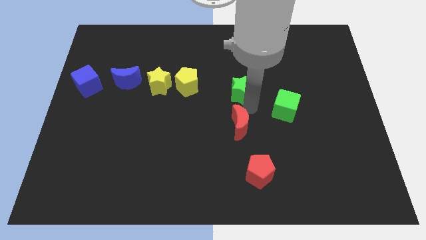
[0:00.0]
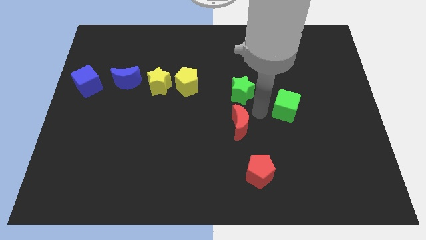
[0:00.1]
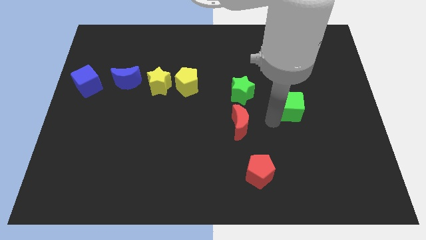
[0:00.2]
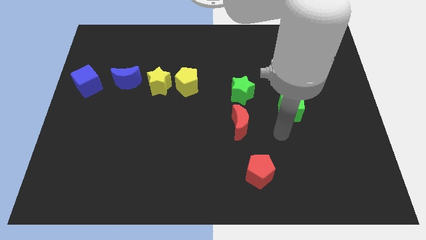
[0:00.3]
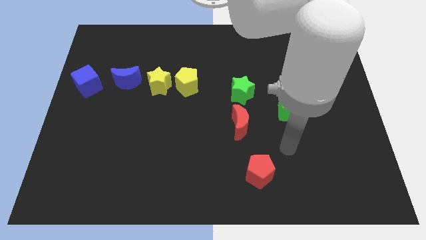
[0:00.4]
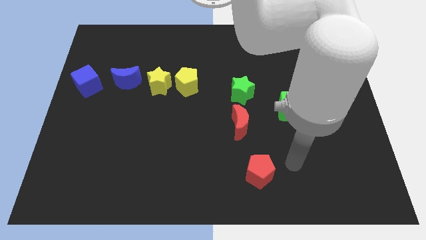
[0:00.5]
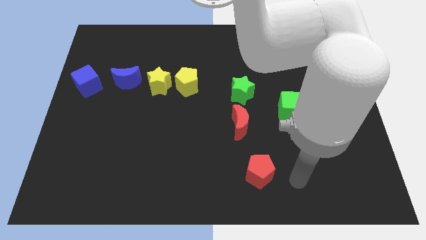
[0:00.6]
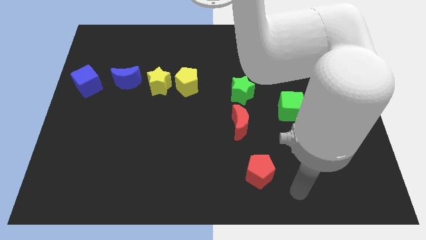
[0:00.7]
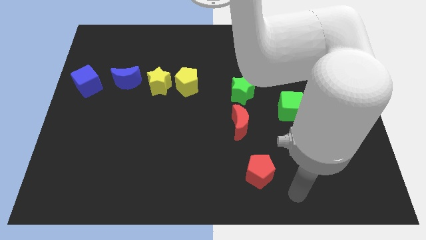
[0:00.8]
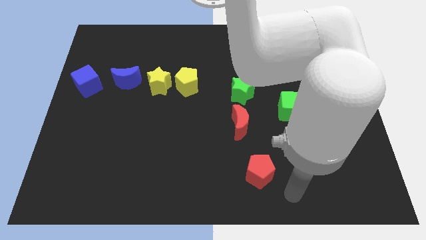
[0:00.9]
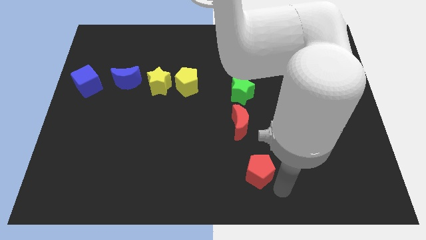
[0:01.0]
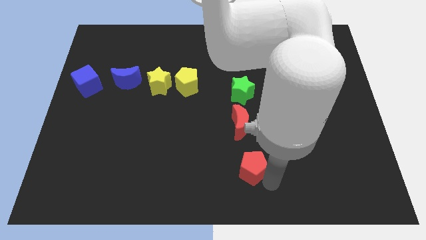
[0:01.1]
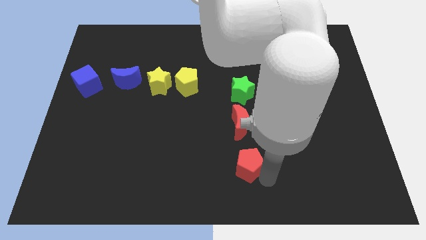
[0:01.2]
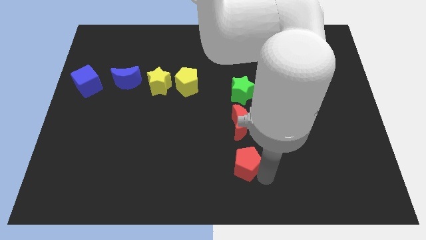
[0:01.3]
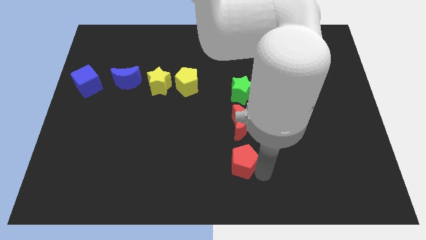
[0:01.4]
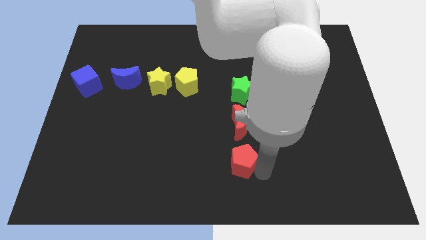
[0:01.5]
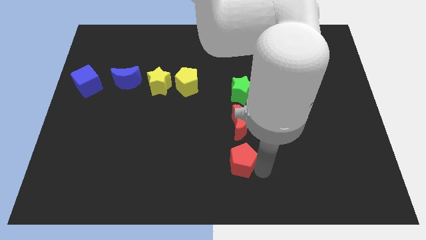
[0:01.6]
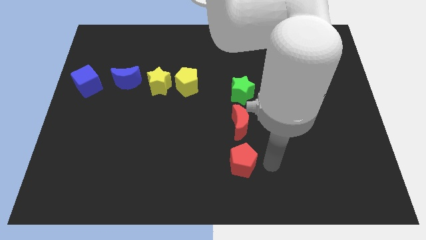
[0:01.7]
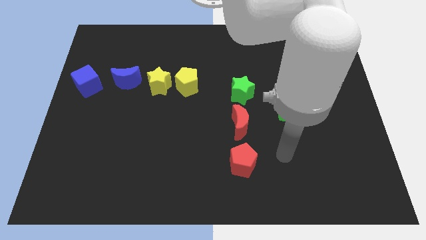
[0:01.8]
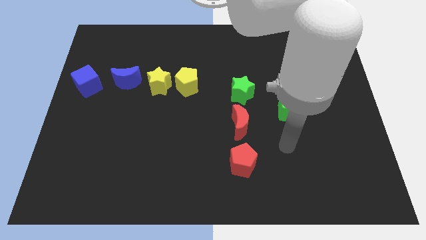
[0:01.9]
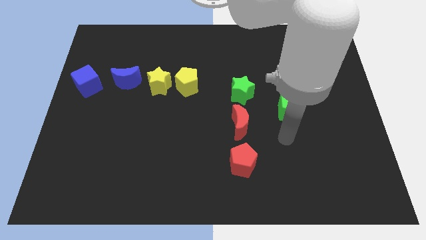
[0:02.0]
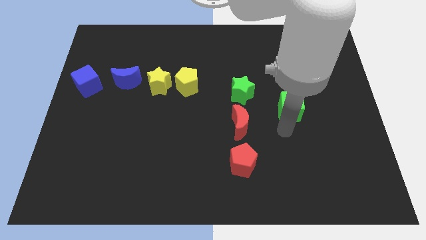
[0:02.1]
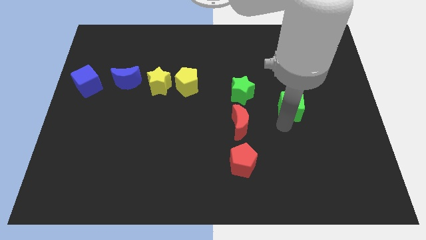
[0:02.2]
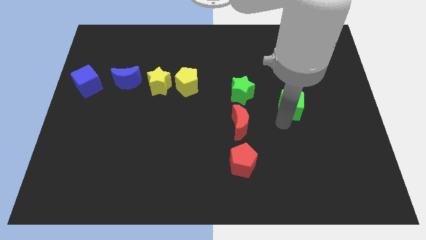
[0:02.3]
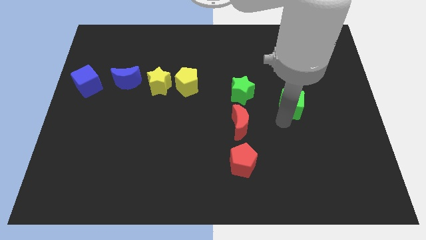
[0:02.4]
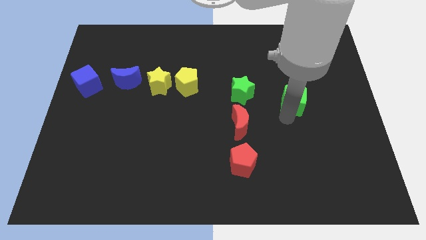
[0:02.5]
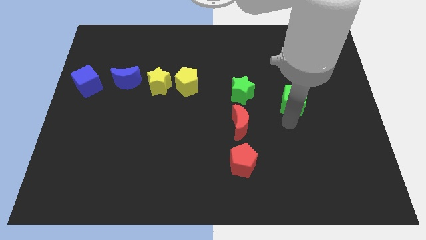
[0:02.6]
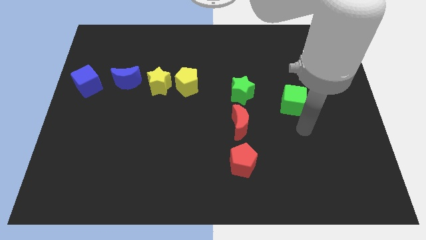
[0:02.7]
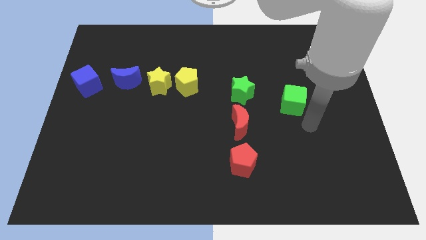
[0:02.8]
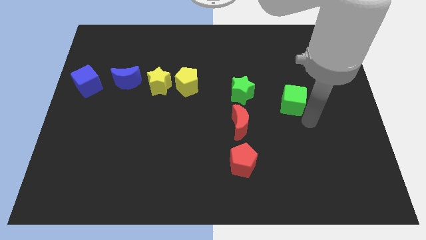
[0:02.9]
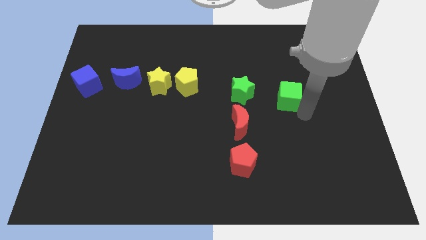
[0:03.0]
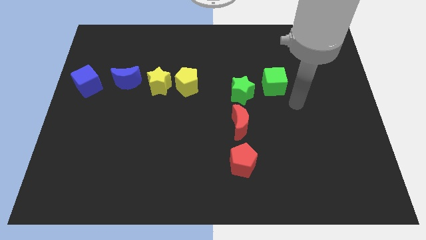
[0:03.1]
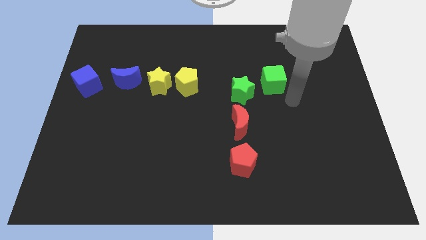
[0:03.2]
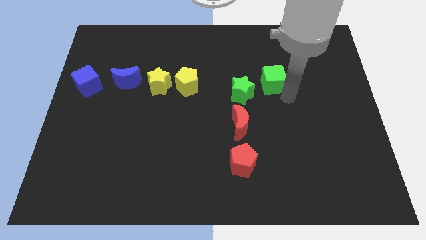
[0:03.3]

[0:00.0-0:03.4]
move the red pentagon below the red crescent

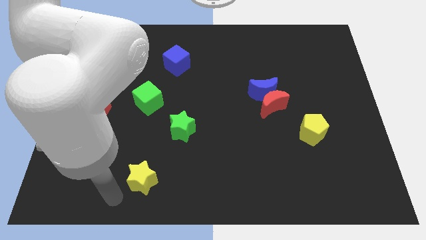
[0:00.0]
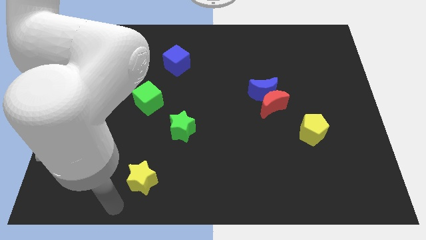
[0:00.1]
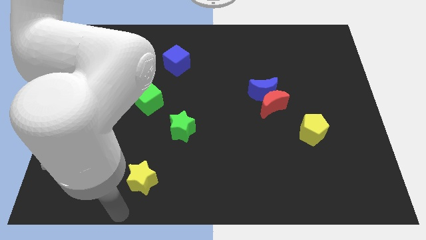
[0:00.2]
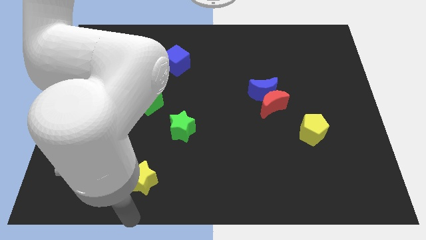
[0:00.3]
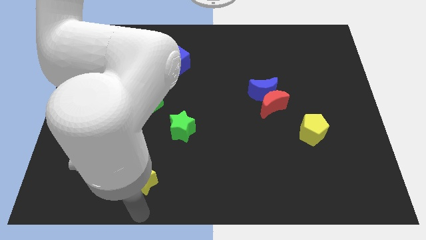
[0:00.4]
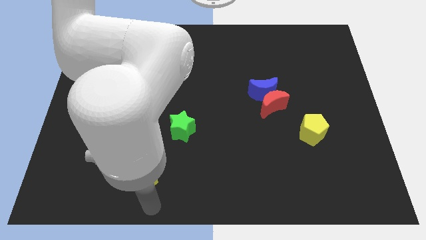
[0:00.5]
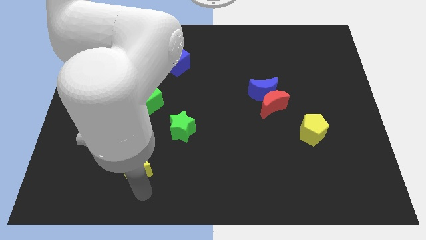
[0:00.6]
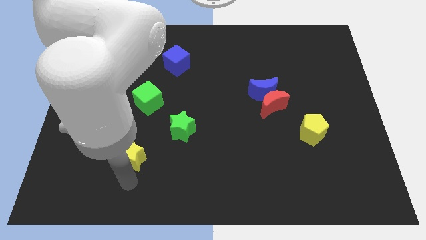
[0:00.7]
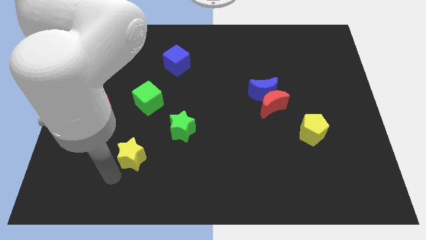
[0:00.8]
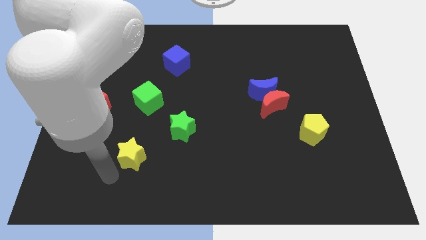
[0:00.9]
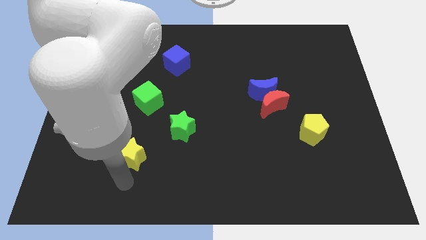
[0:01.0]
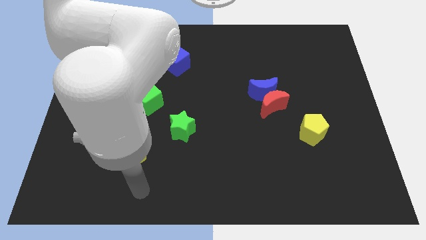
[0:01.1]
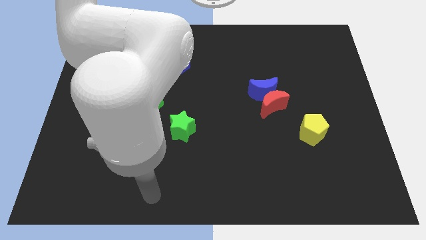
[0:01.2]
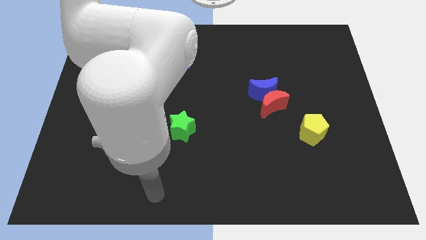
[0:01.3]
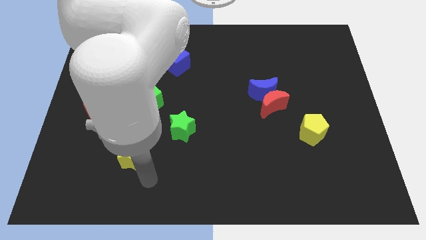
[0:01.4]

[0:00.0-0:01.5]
slide the yellow star diagonally on the bottom left side of the green star

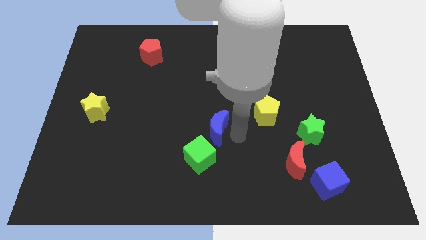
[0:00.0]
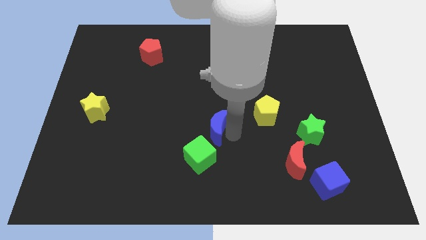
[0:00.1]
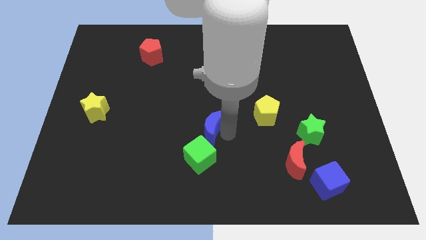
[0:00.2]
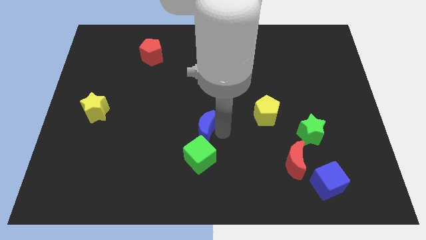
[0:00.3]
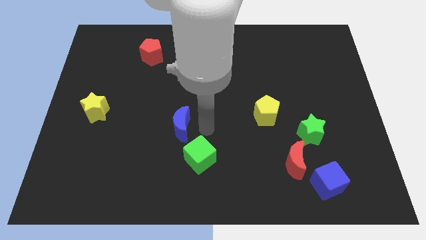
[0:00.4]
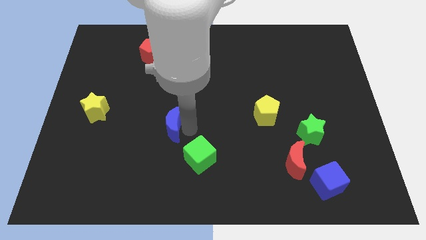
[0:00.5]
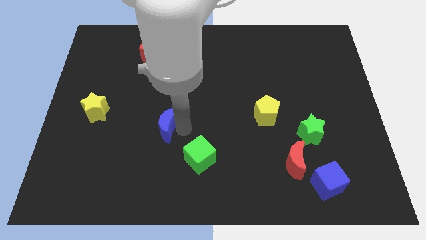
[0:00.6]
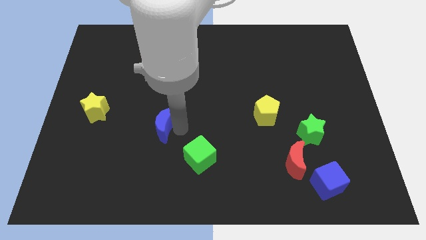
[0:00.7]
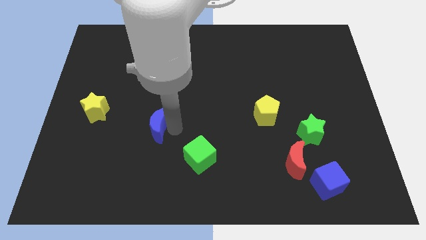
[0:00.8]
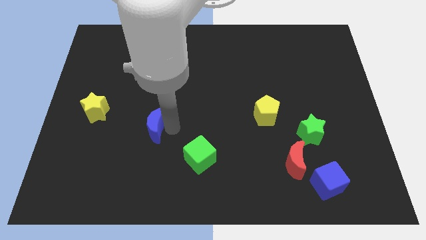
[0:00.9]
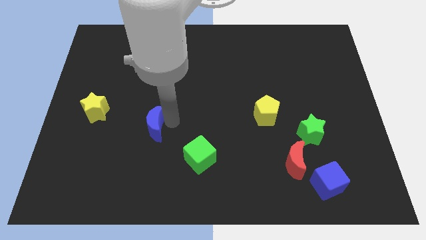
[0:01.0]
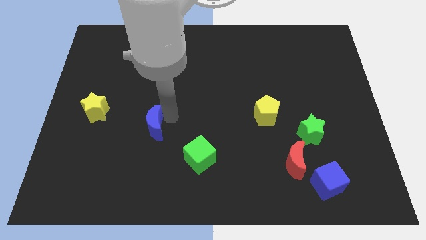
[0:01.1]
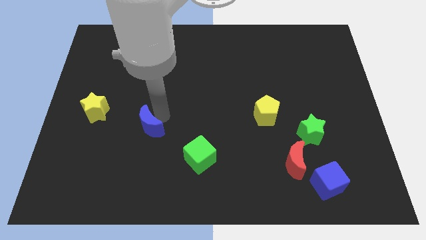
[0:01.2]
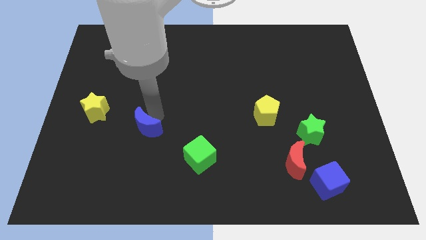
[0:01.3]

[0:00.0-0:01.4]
push the blue moon towards the left side of the board

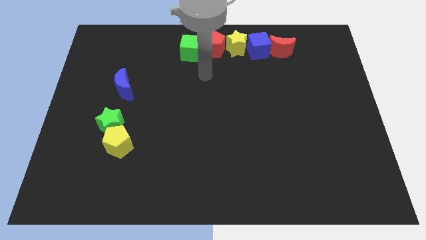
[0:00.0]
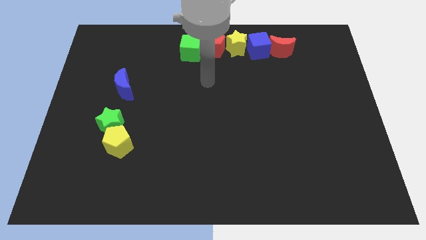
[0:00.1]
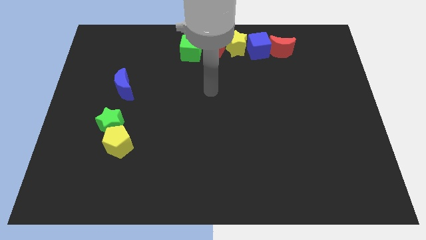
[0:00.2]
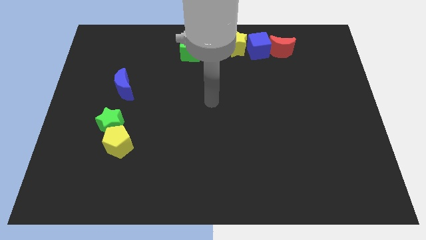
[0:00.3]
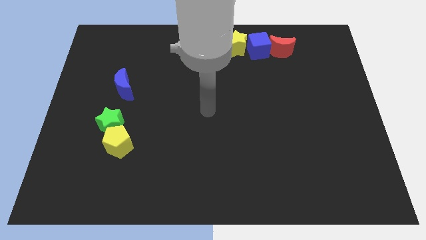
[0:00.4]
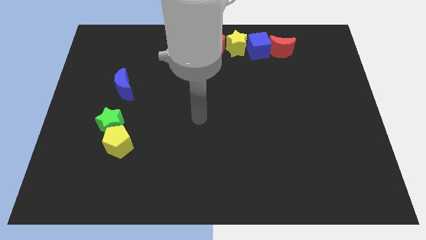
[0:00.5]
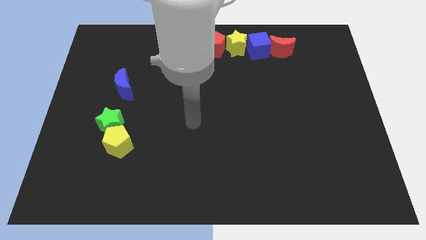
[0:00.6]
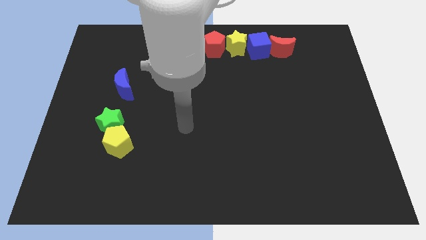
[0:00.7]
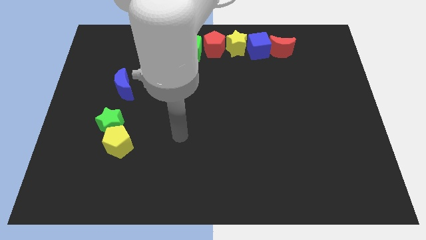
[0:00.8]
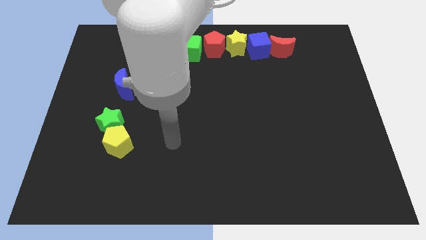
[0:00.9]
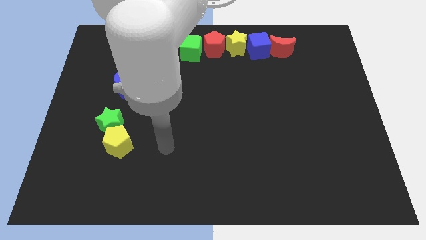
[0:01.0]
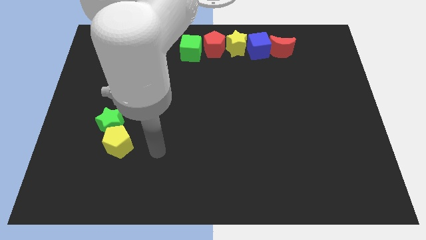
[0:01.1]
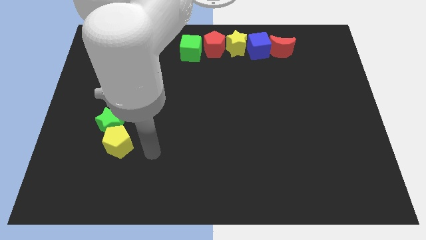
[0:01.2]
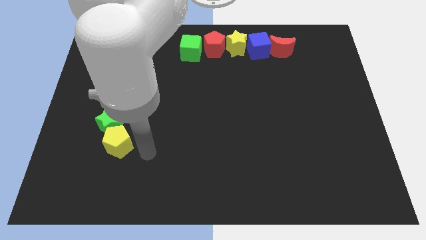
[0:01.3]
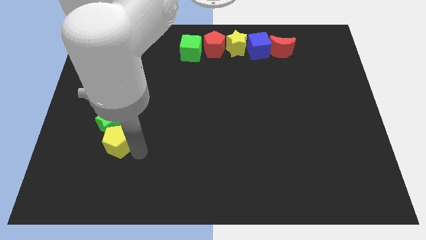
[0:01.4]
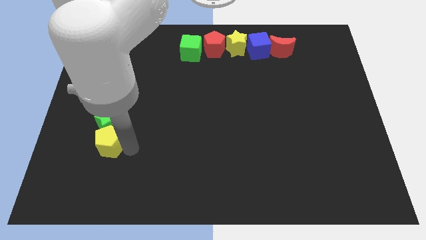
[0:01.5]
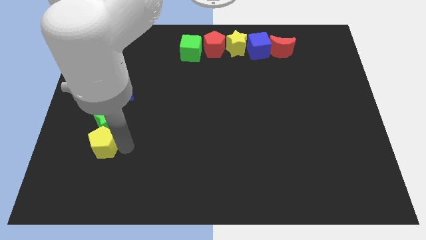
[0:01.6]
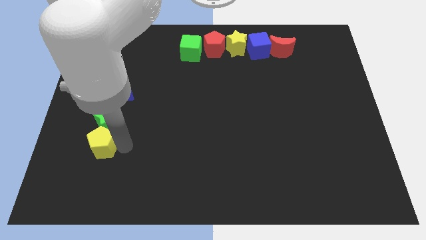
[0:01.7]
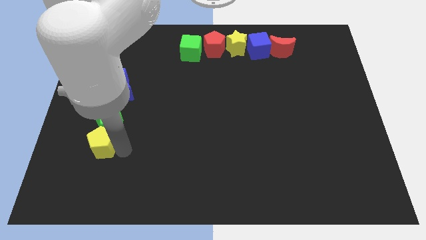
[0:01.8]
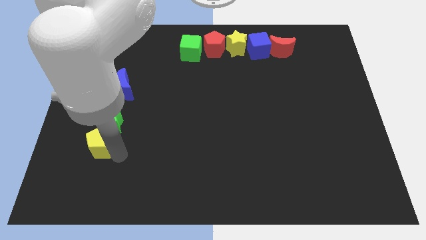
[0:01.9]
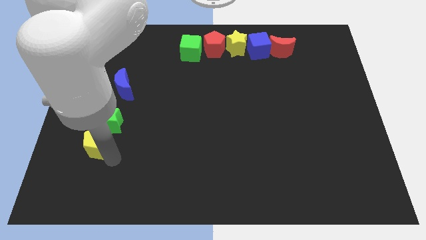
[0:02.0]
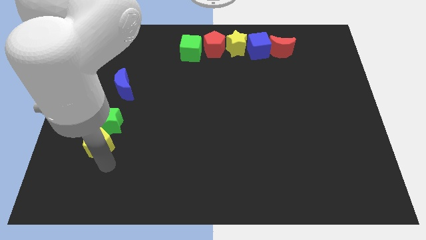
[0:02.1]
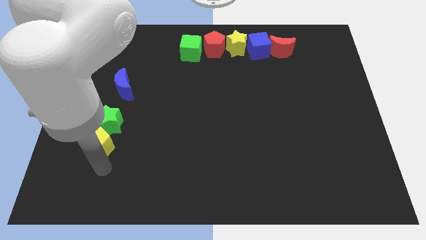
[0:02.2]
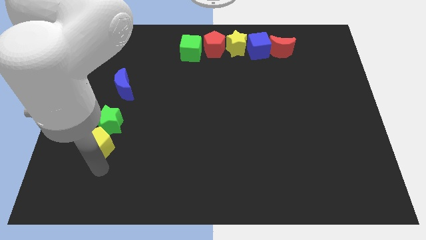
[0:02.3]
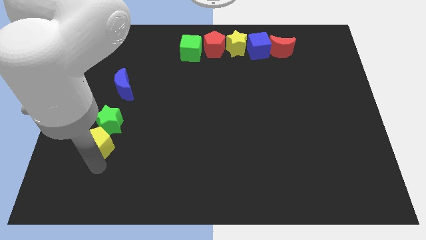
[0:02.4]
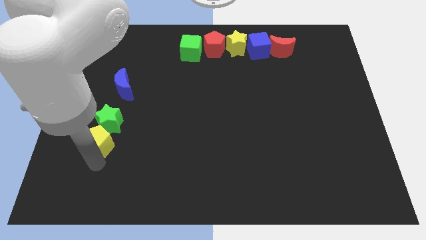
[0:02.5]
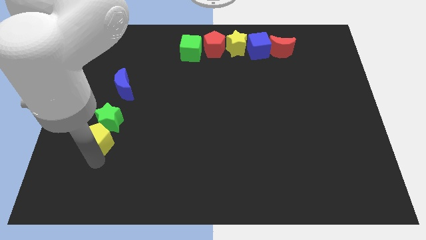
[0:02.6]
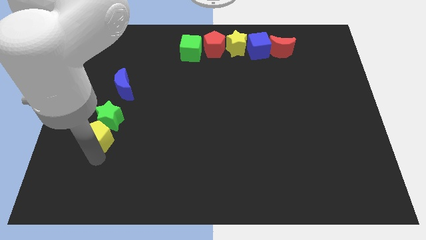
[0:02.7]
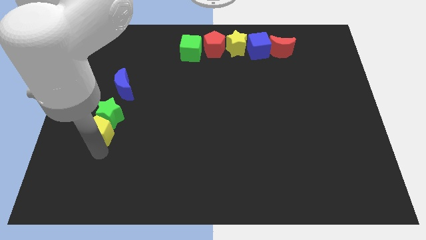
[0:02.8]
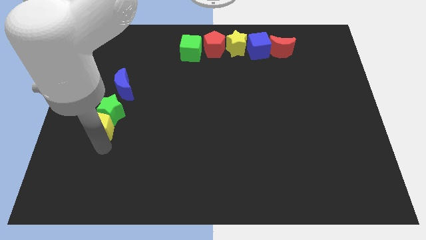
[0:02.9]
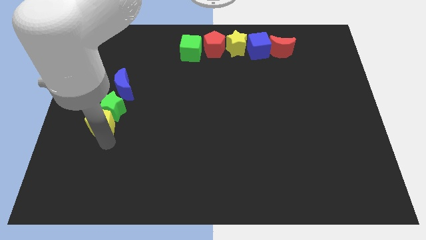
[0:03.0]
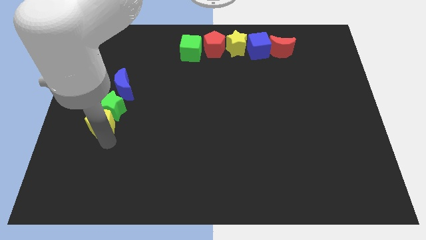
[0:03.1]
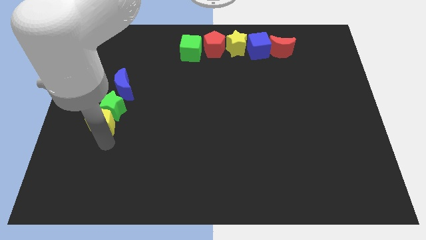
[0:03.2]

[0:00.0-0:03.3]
slide the yellow pentagon and green star slightly upwards
